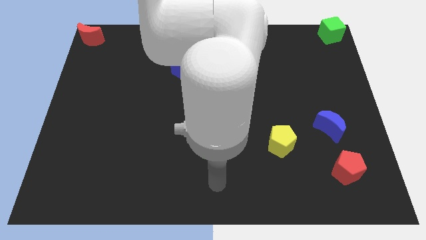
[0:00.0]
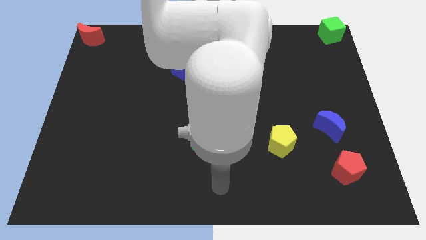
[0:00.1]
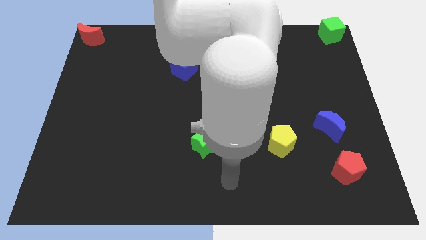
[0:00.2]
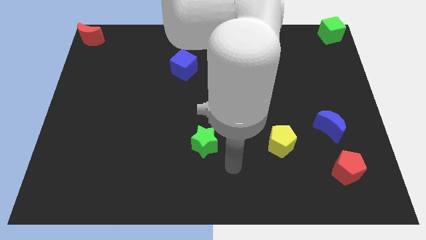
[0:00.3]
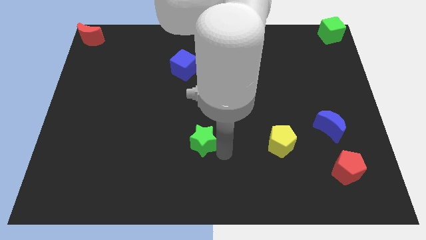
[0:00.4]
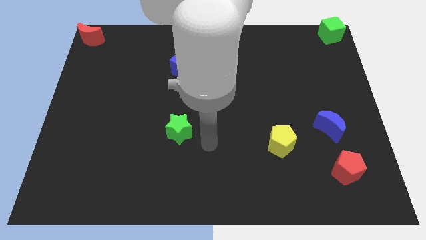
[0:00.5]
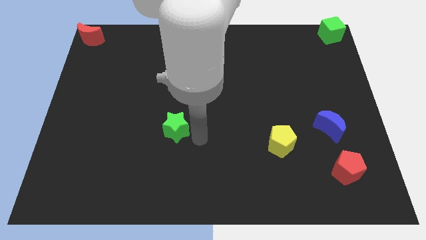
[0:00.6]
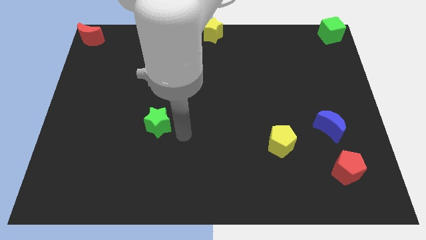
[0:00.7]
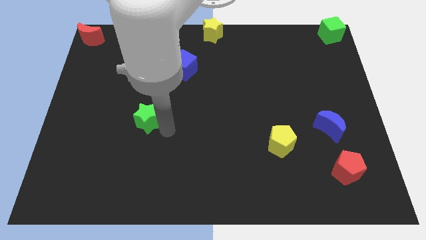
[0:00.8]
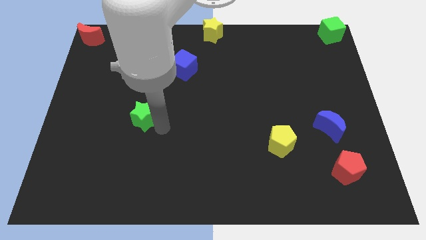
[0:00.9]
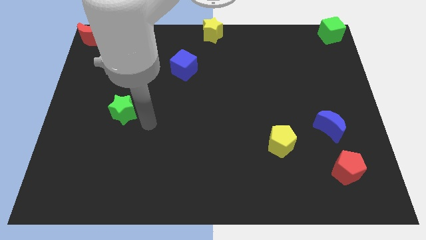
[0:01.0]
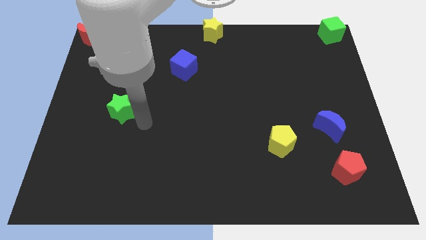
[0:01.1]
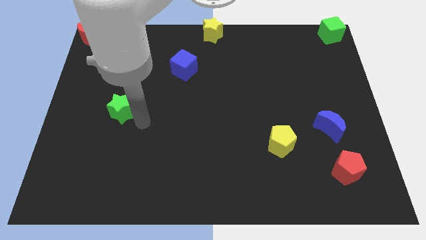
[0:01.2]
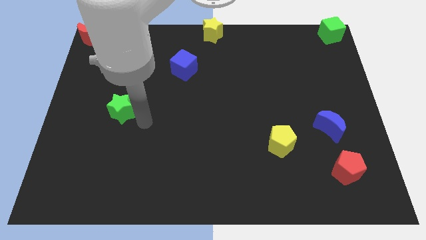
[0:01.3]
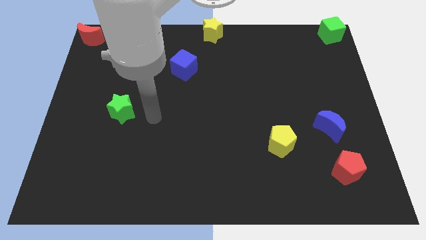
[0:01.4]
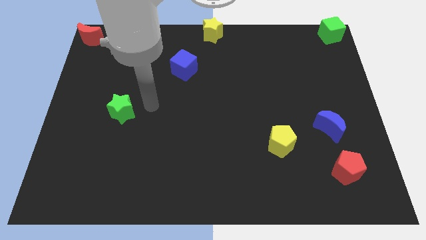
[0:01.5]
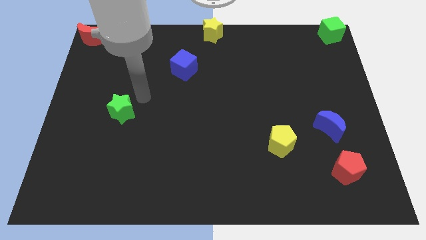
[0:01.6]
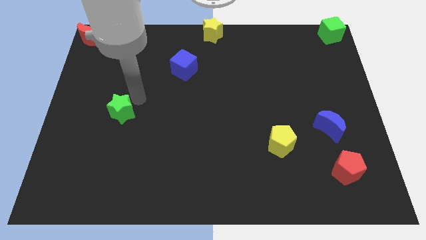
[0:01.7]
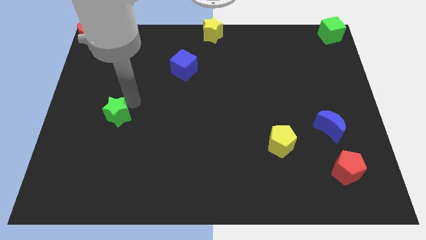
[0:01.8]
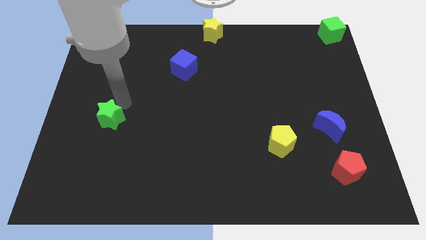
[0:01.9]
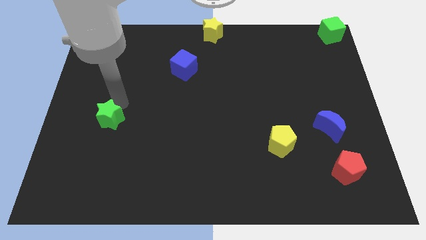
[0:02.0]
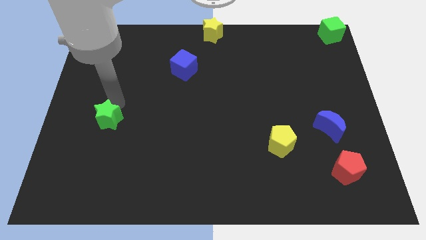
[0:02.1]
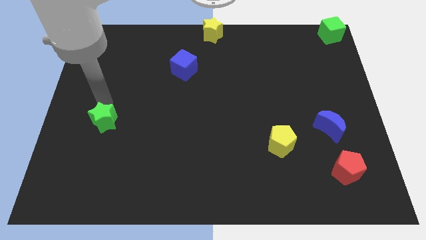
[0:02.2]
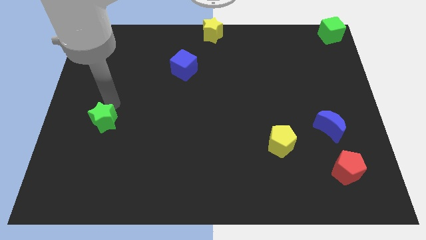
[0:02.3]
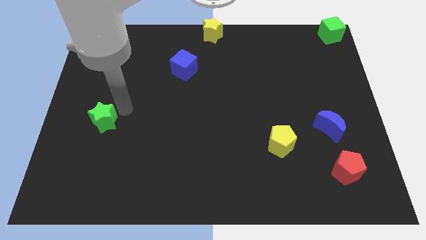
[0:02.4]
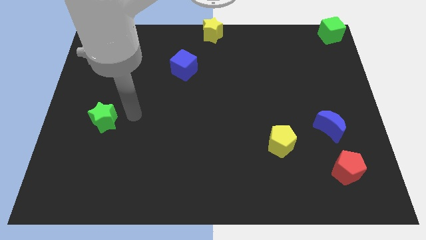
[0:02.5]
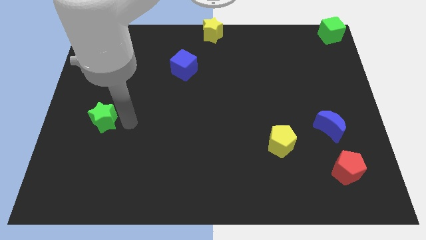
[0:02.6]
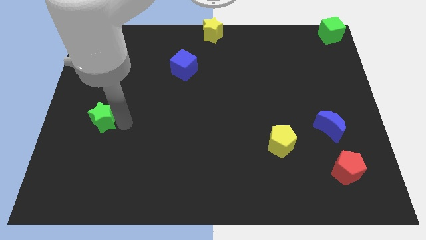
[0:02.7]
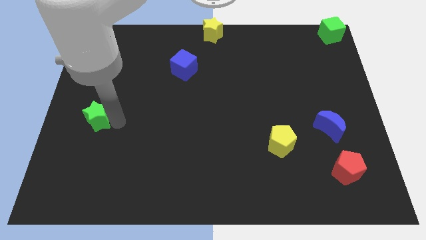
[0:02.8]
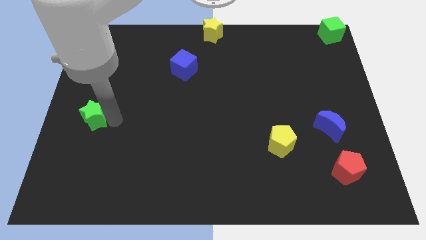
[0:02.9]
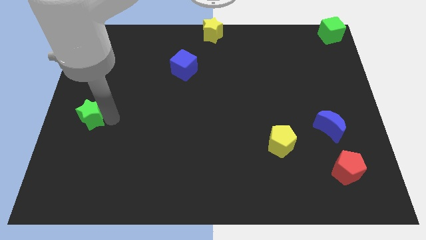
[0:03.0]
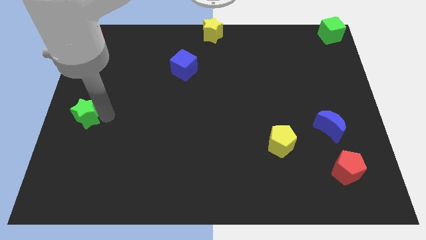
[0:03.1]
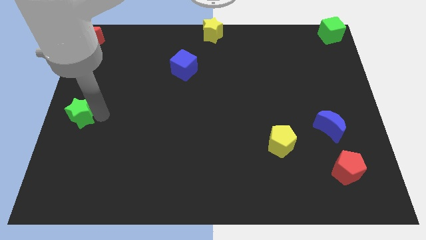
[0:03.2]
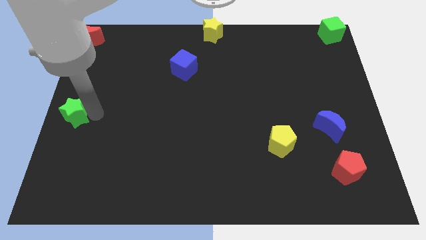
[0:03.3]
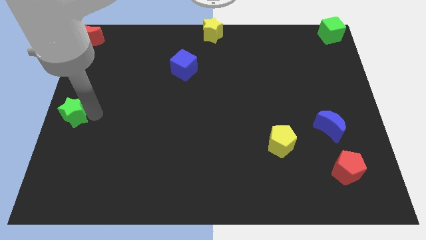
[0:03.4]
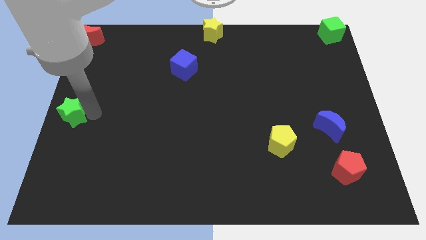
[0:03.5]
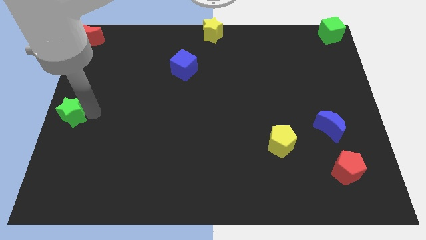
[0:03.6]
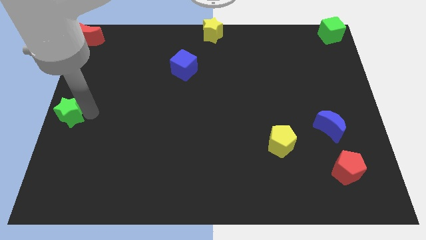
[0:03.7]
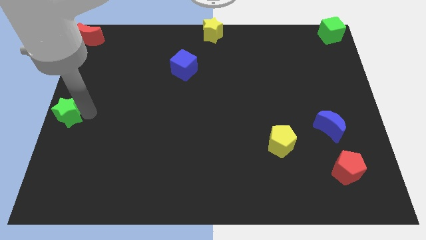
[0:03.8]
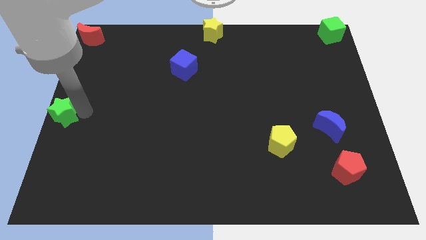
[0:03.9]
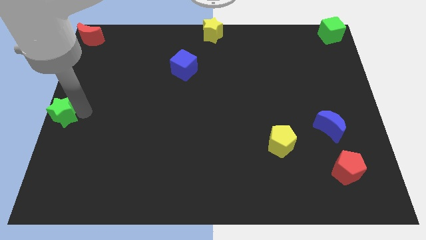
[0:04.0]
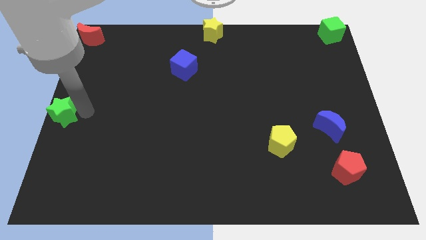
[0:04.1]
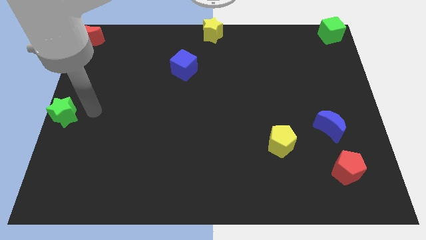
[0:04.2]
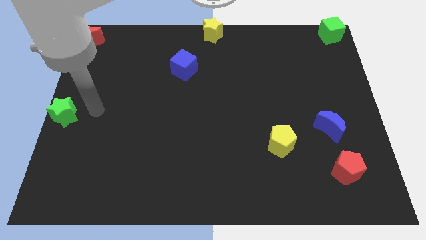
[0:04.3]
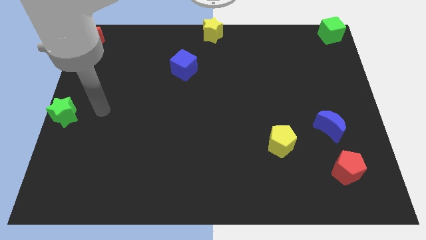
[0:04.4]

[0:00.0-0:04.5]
move the green star to the center left of the board

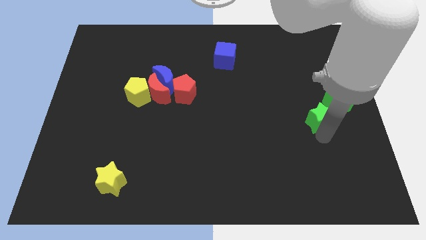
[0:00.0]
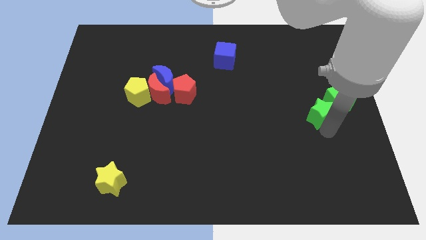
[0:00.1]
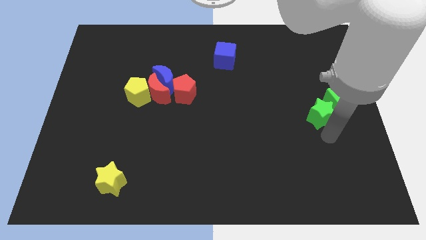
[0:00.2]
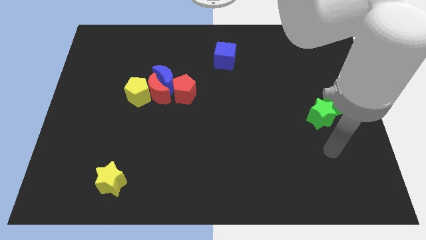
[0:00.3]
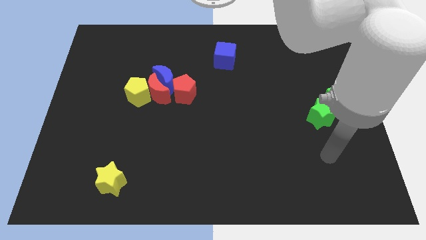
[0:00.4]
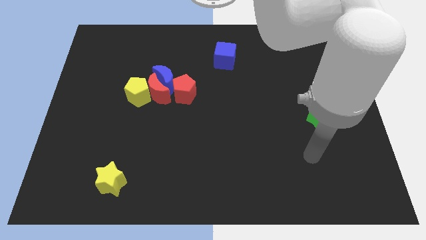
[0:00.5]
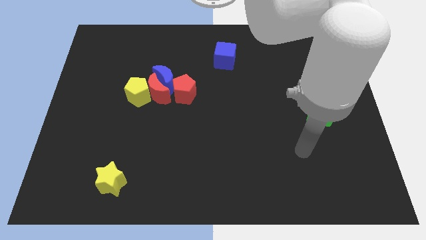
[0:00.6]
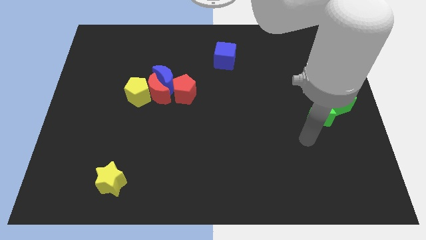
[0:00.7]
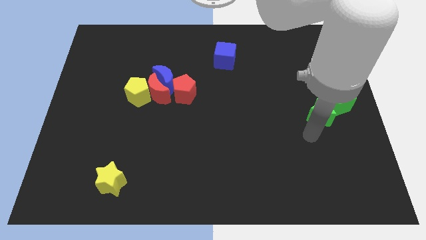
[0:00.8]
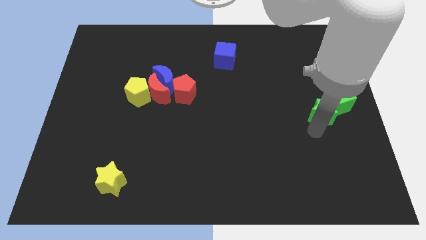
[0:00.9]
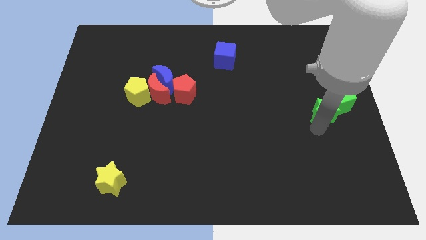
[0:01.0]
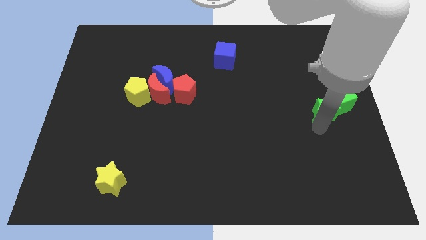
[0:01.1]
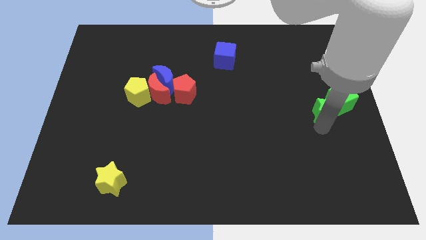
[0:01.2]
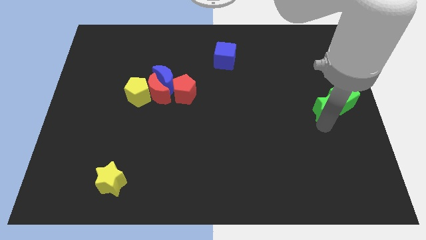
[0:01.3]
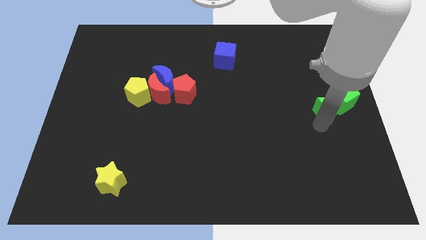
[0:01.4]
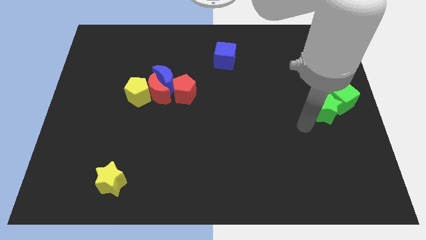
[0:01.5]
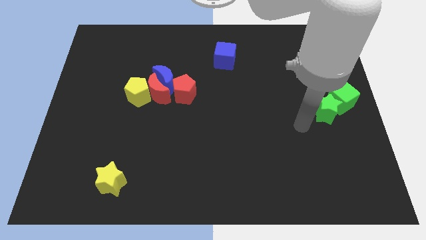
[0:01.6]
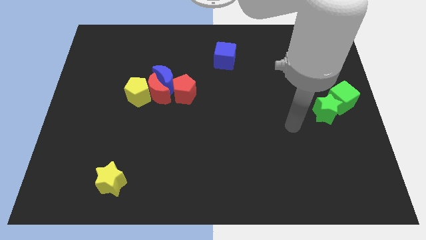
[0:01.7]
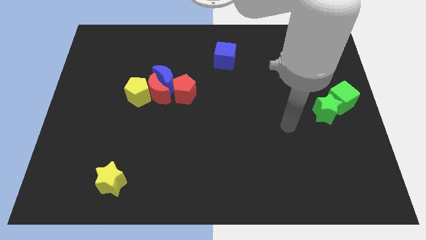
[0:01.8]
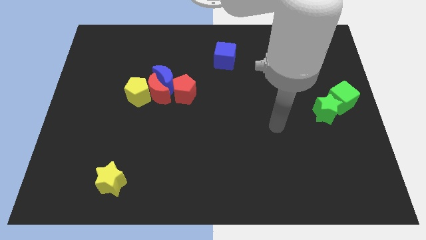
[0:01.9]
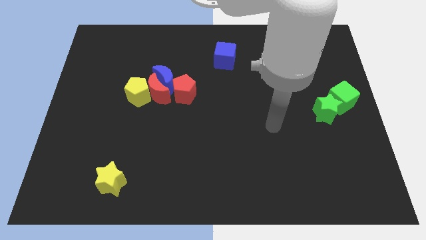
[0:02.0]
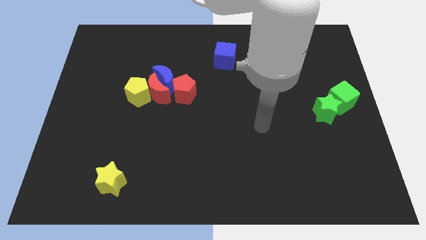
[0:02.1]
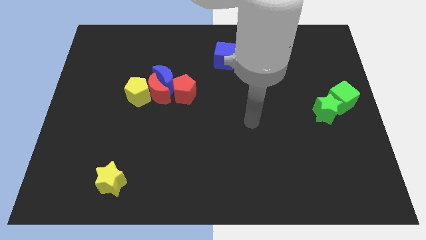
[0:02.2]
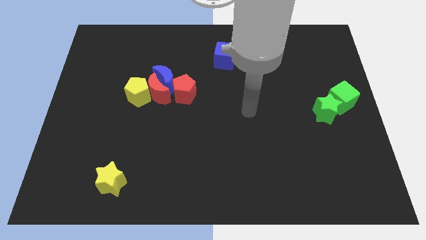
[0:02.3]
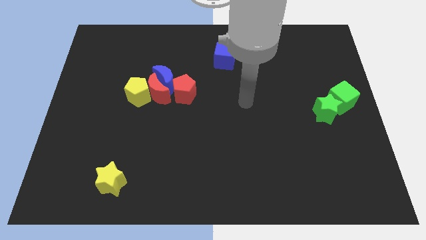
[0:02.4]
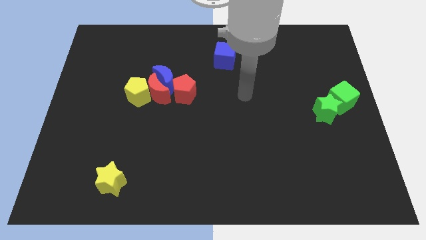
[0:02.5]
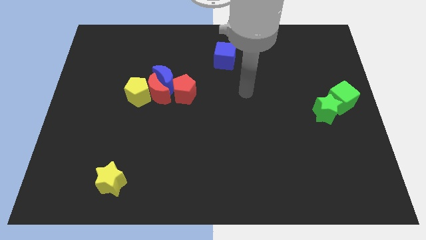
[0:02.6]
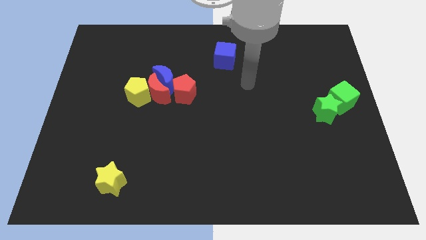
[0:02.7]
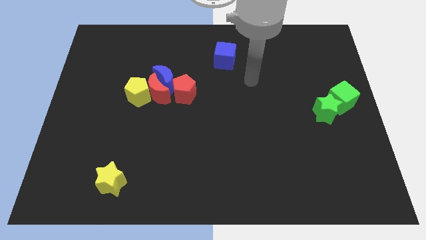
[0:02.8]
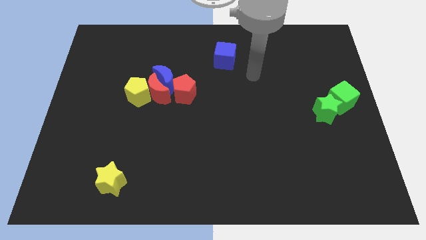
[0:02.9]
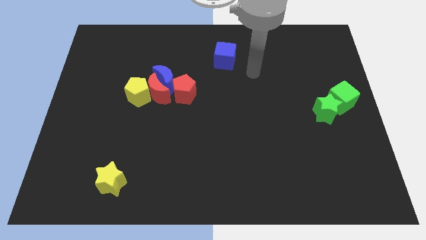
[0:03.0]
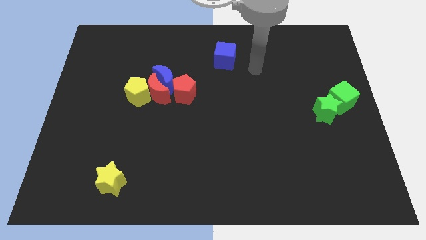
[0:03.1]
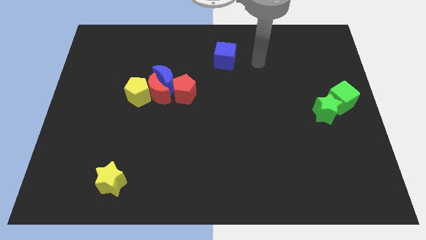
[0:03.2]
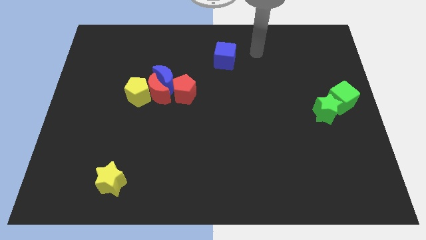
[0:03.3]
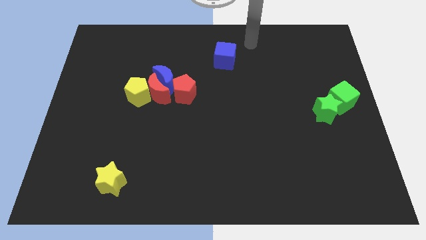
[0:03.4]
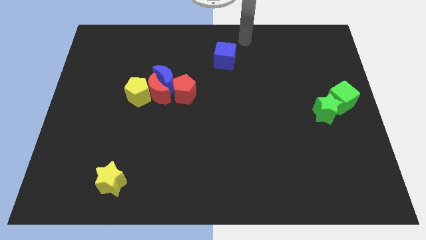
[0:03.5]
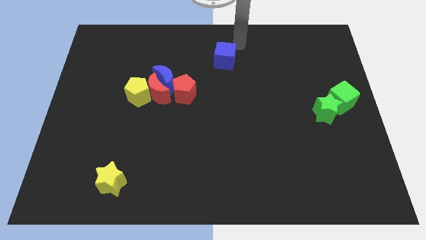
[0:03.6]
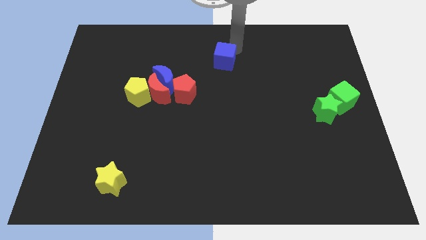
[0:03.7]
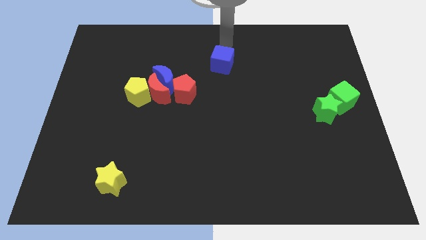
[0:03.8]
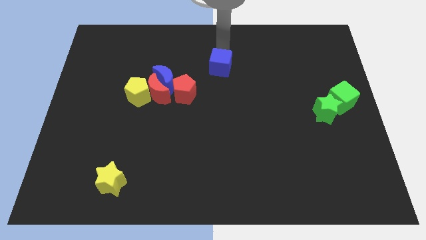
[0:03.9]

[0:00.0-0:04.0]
move your arm towards the top of the blue cube

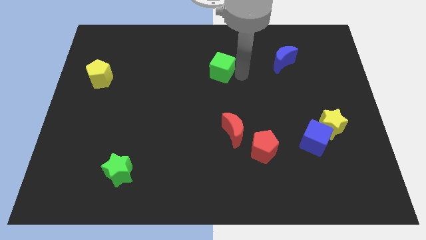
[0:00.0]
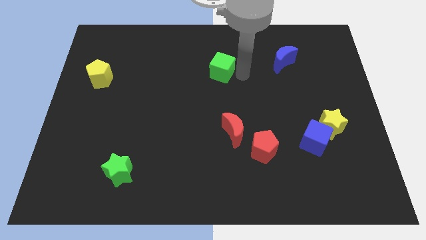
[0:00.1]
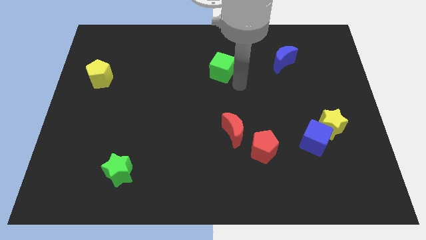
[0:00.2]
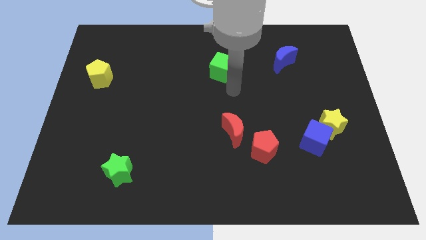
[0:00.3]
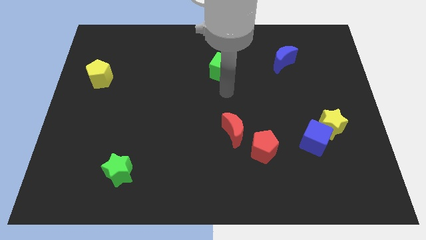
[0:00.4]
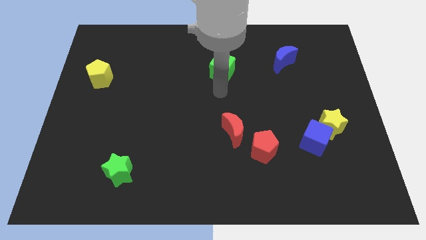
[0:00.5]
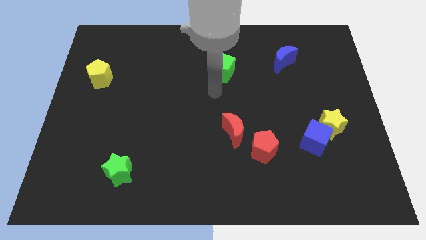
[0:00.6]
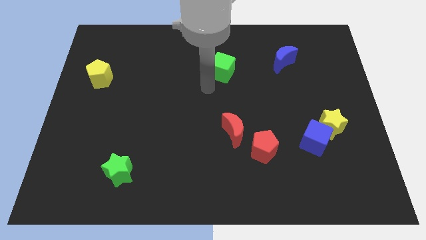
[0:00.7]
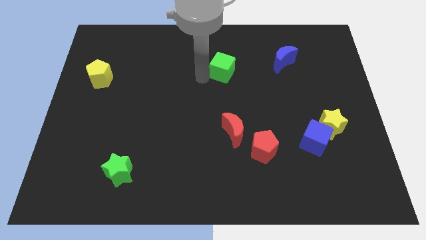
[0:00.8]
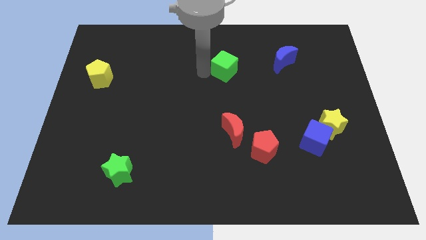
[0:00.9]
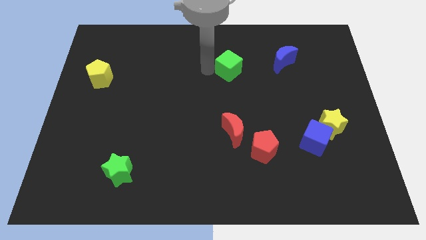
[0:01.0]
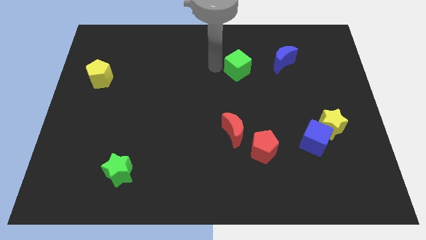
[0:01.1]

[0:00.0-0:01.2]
move green cube slightlyy right
